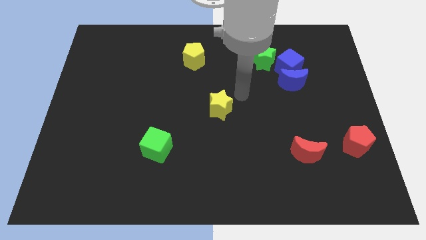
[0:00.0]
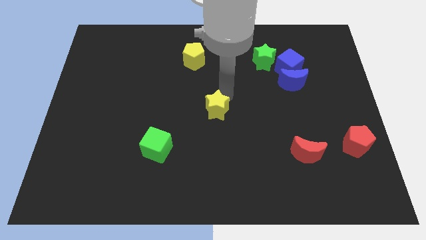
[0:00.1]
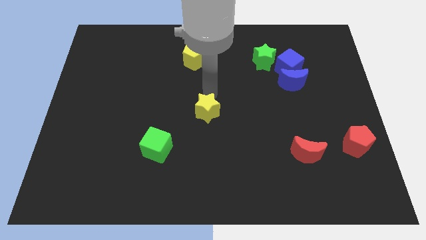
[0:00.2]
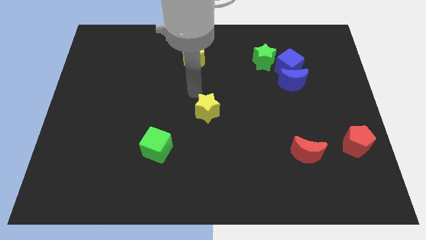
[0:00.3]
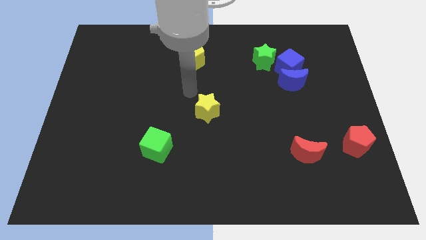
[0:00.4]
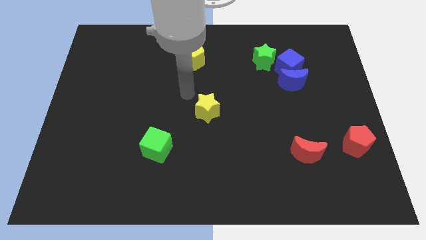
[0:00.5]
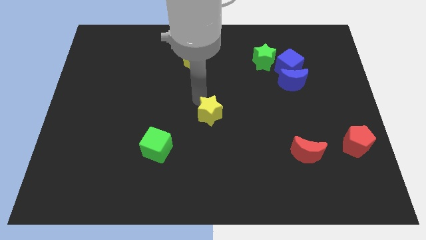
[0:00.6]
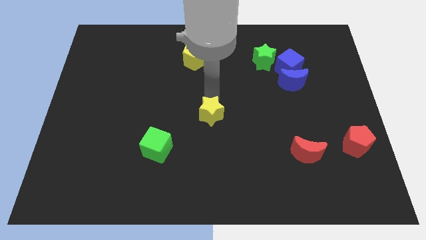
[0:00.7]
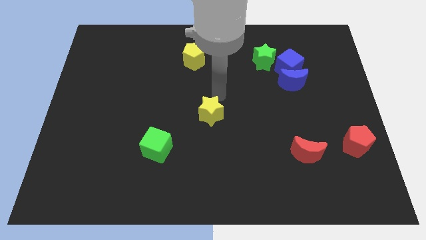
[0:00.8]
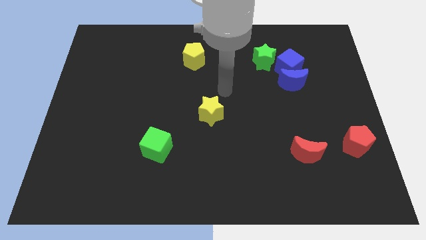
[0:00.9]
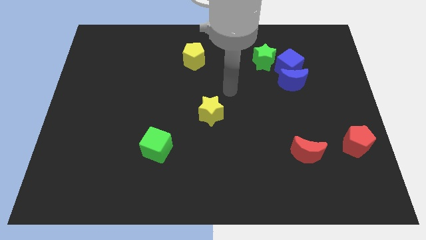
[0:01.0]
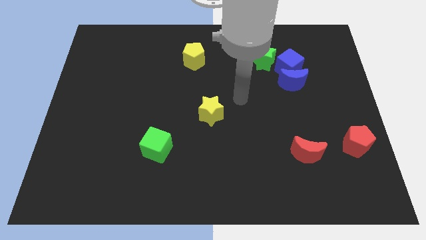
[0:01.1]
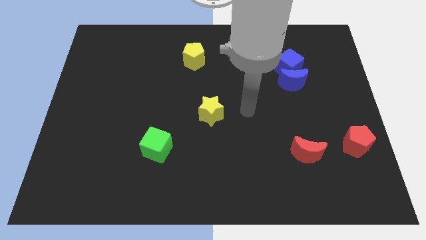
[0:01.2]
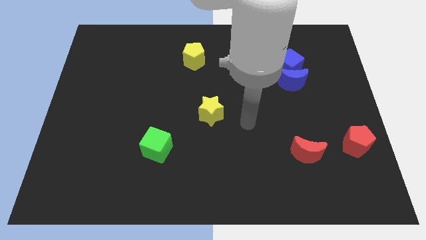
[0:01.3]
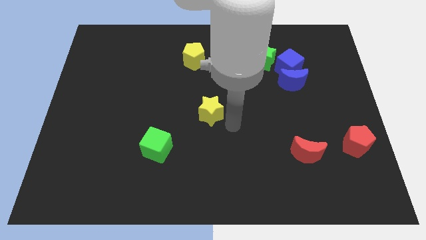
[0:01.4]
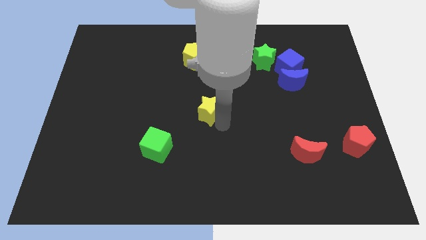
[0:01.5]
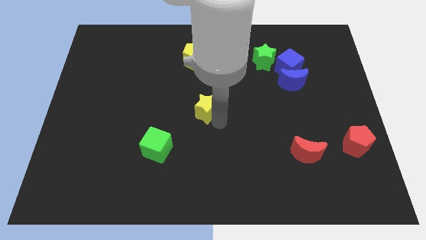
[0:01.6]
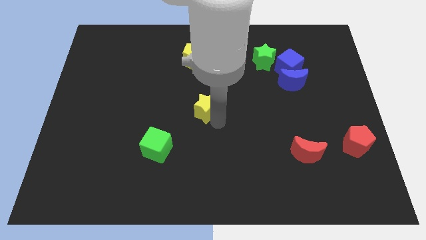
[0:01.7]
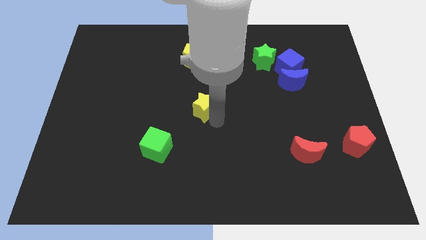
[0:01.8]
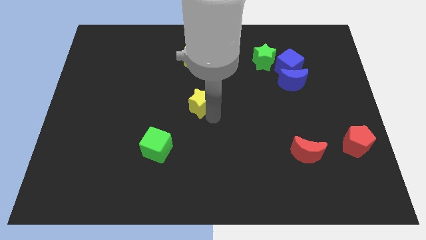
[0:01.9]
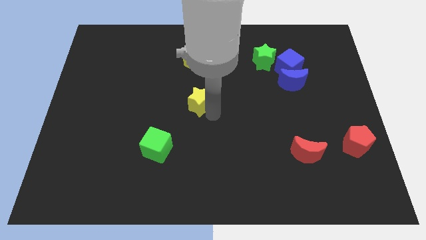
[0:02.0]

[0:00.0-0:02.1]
push the yellow star to the bottom of the yellow pentagon

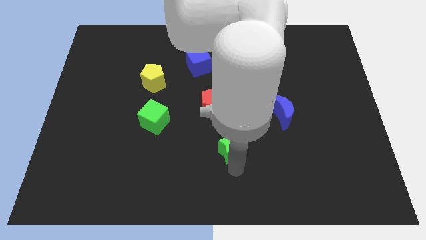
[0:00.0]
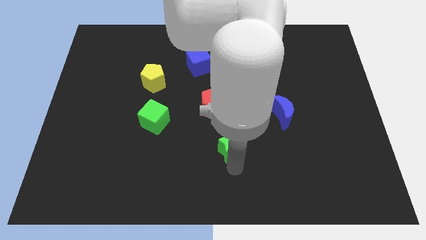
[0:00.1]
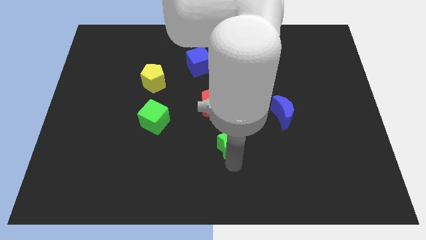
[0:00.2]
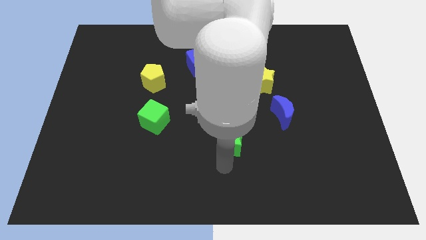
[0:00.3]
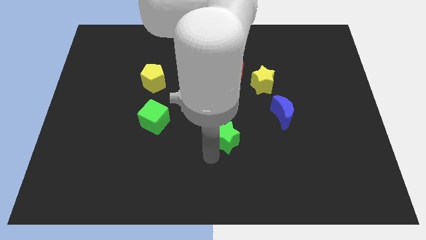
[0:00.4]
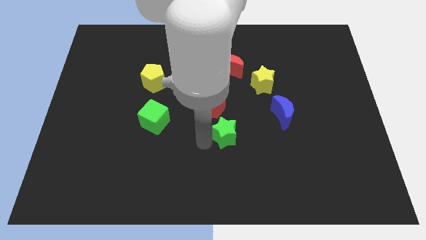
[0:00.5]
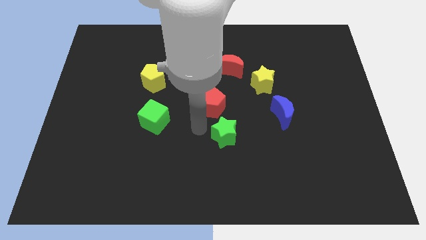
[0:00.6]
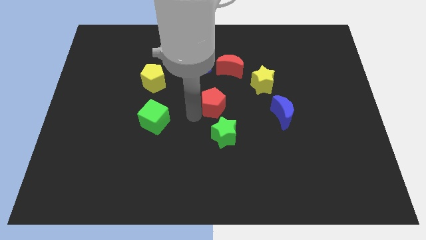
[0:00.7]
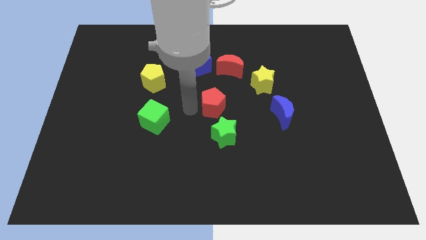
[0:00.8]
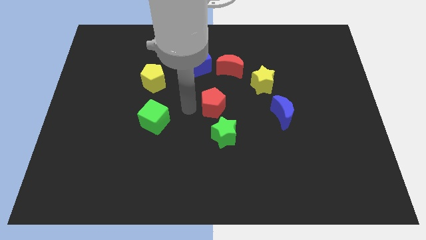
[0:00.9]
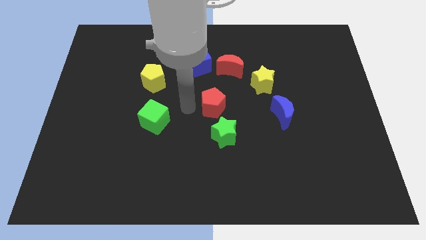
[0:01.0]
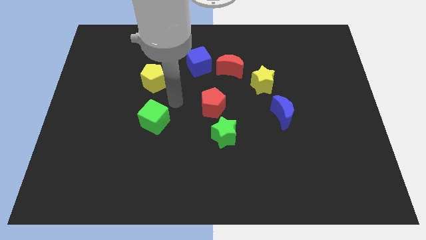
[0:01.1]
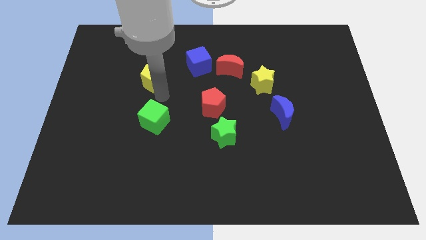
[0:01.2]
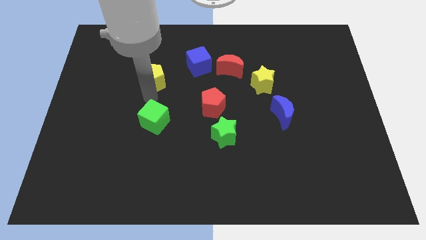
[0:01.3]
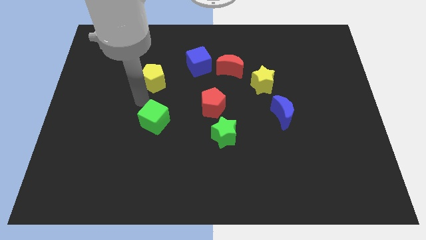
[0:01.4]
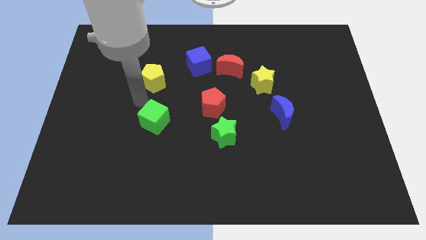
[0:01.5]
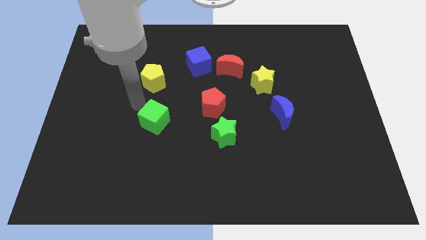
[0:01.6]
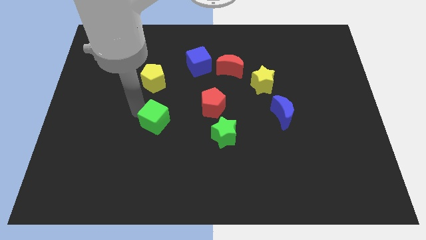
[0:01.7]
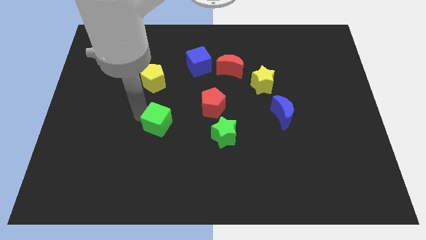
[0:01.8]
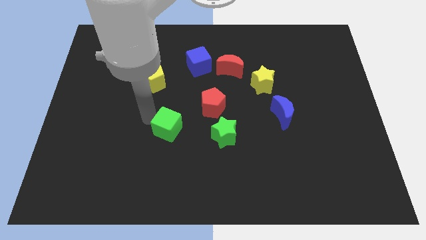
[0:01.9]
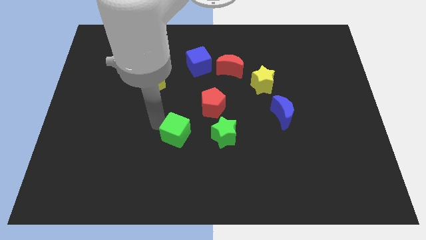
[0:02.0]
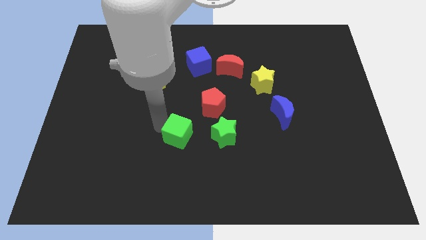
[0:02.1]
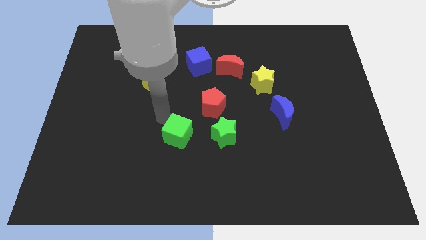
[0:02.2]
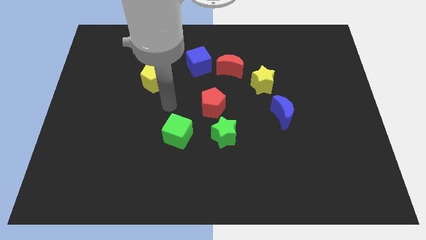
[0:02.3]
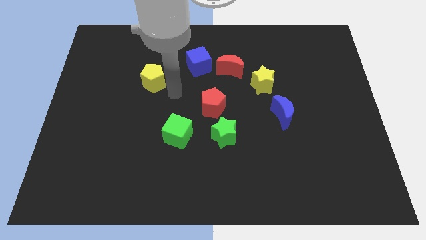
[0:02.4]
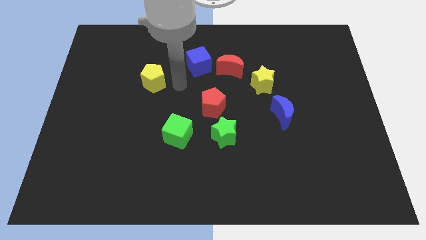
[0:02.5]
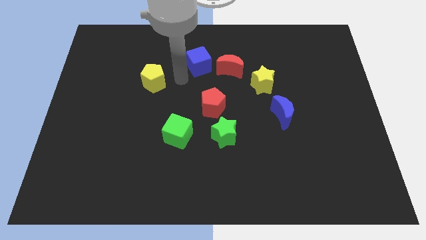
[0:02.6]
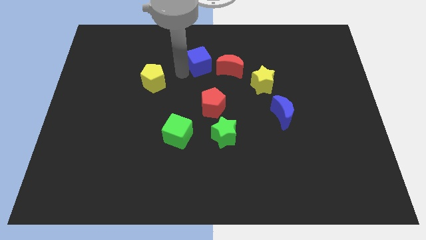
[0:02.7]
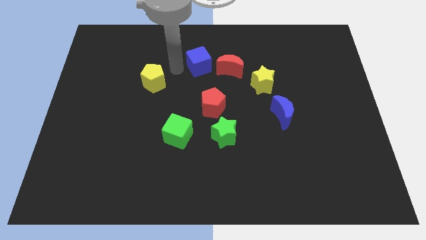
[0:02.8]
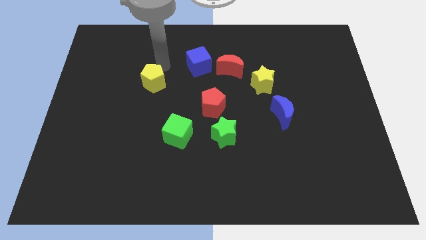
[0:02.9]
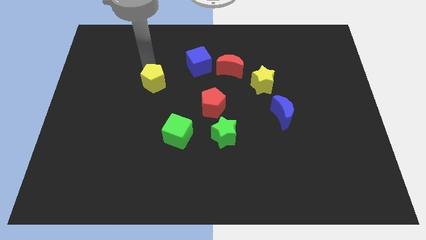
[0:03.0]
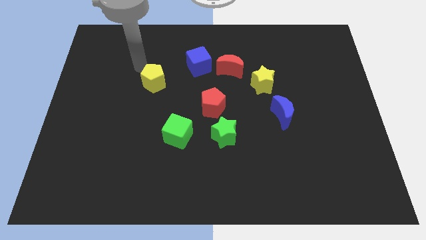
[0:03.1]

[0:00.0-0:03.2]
slide the green cube parallel left to the green star

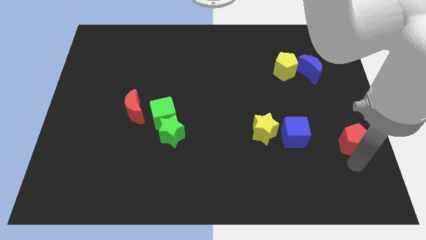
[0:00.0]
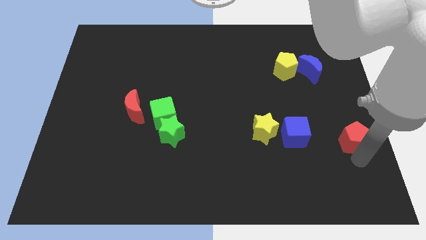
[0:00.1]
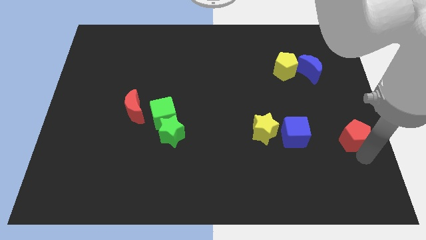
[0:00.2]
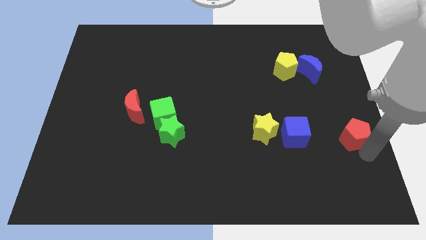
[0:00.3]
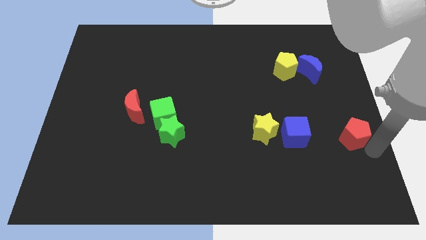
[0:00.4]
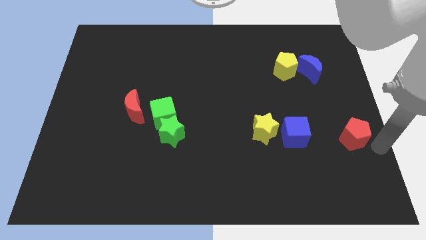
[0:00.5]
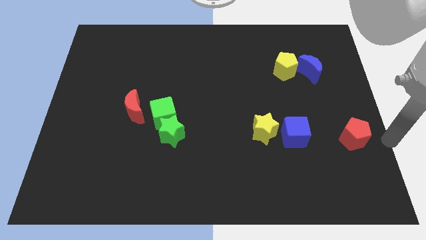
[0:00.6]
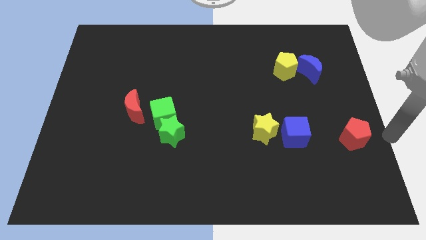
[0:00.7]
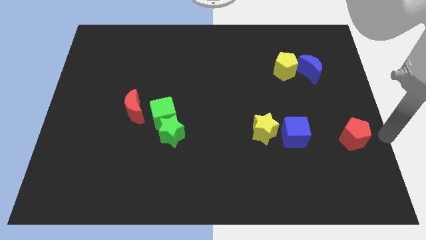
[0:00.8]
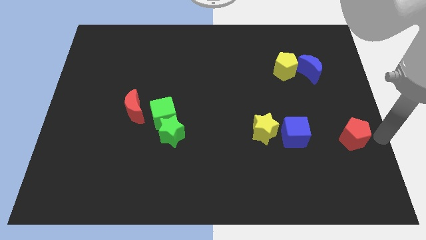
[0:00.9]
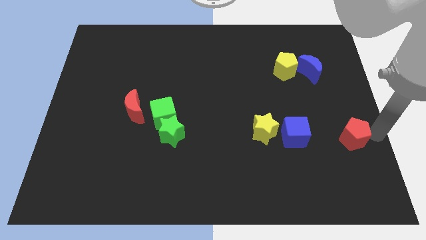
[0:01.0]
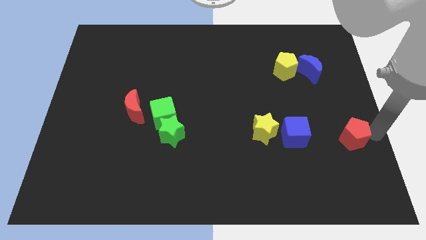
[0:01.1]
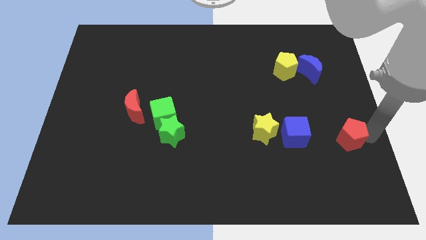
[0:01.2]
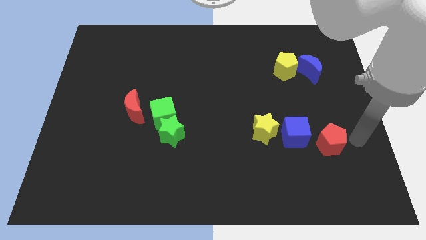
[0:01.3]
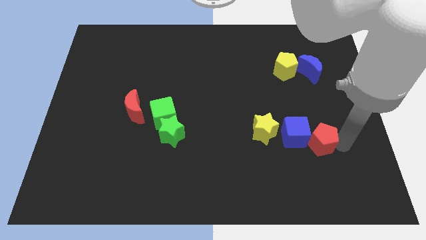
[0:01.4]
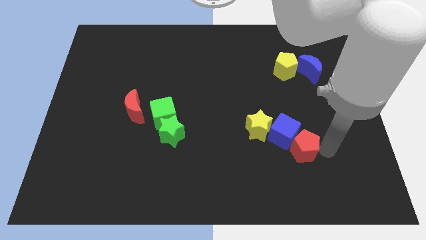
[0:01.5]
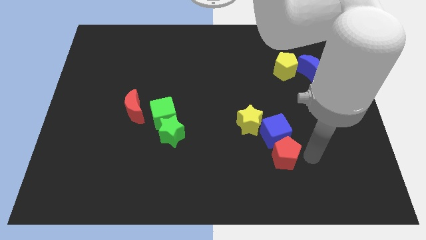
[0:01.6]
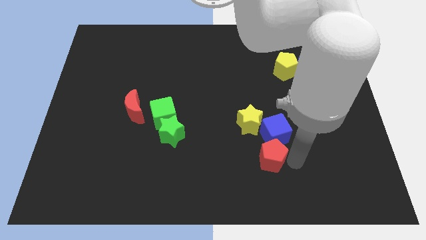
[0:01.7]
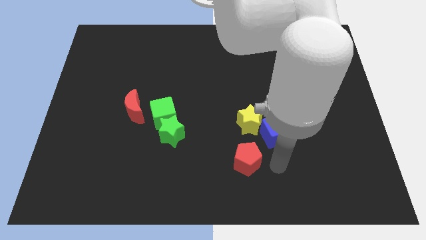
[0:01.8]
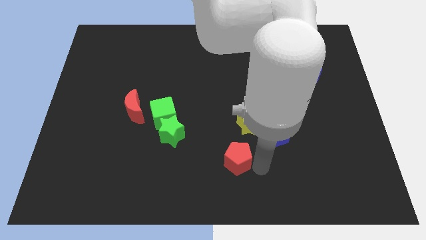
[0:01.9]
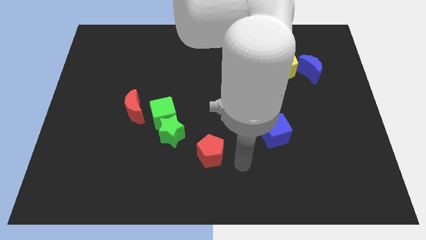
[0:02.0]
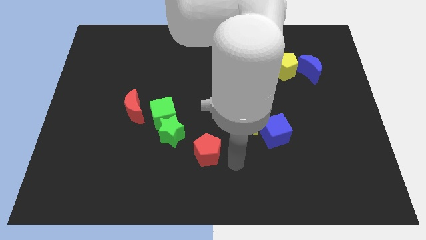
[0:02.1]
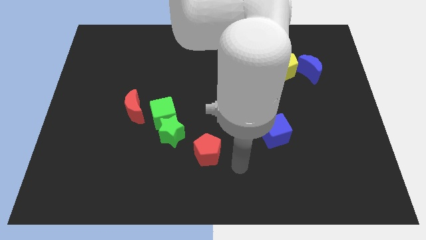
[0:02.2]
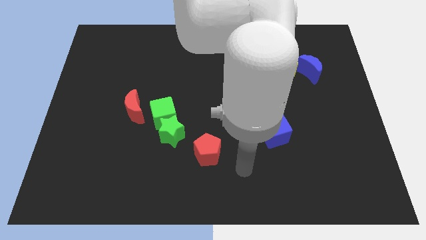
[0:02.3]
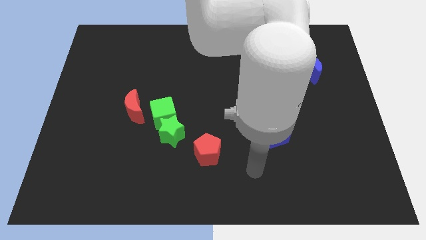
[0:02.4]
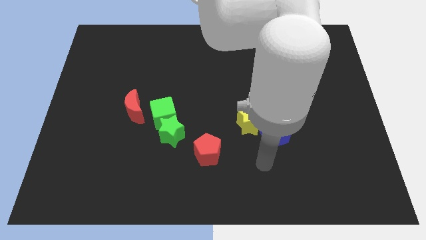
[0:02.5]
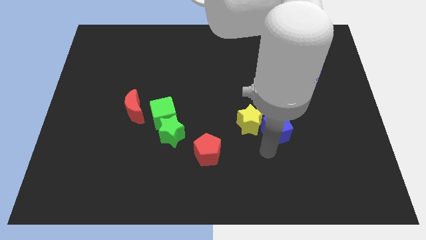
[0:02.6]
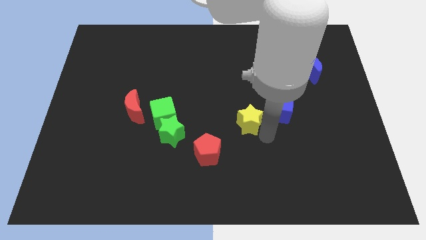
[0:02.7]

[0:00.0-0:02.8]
push the red pentagon to the center of the board

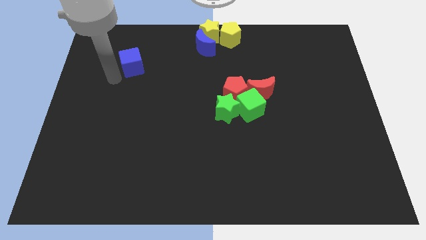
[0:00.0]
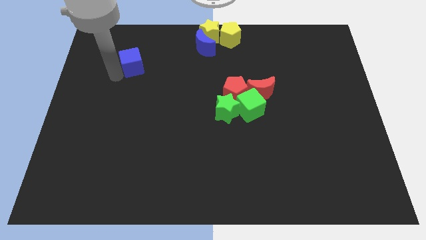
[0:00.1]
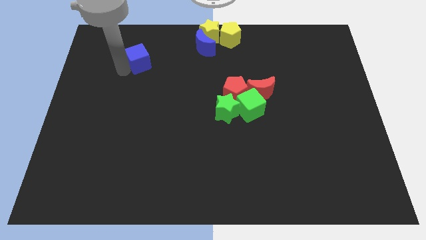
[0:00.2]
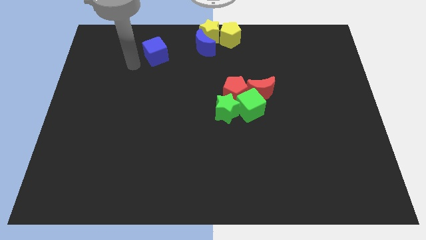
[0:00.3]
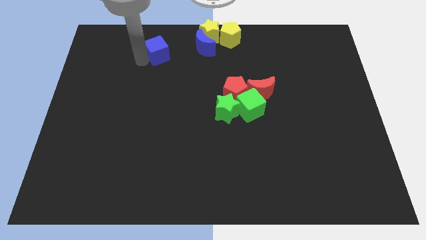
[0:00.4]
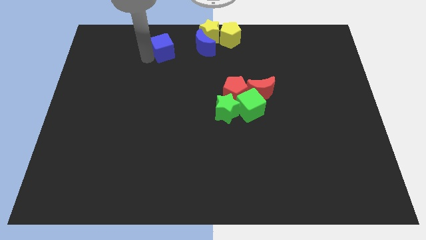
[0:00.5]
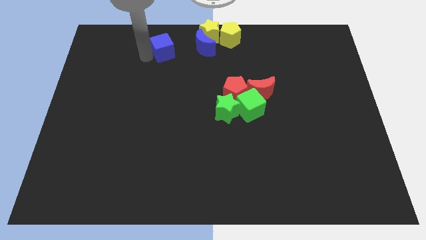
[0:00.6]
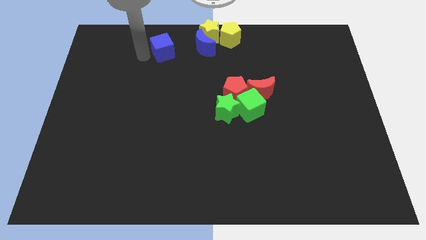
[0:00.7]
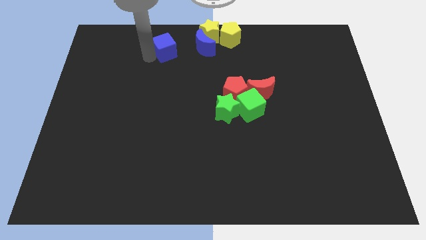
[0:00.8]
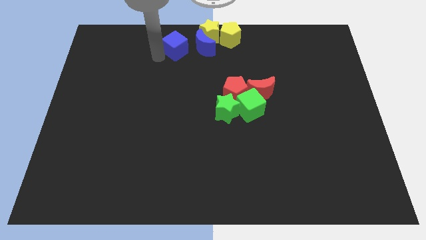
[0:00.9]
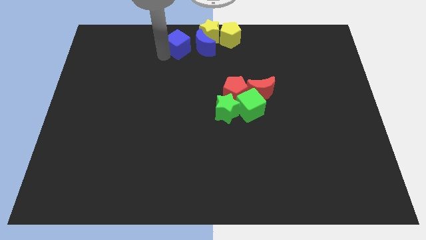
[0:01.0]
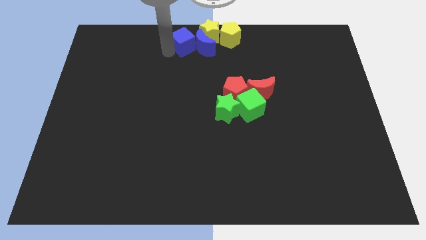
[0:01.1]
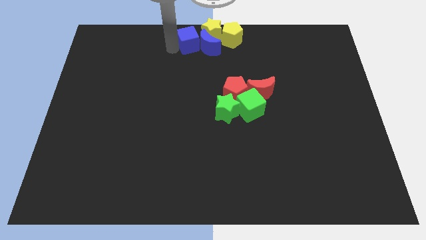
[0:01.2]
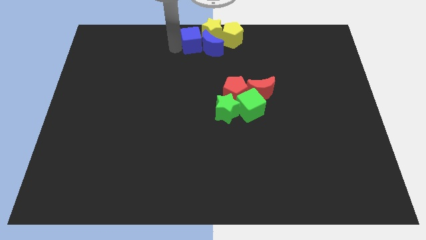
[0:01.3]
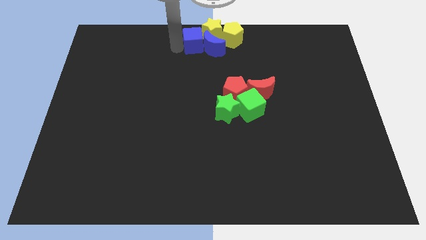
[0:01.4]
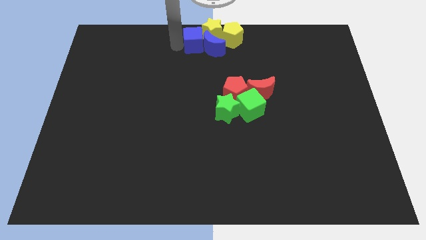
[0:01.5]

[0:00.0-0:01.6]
place blue cube beside blue crescent
